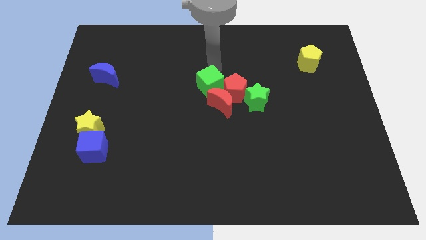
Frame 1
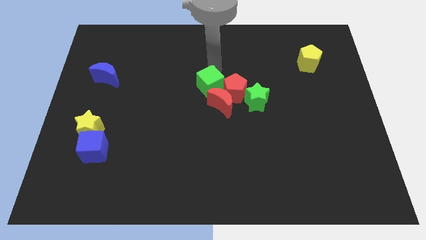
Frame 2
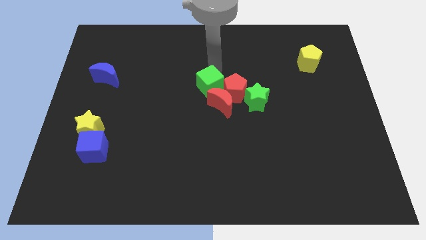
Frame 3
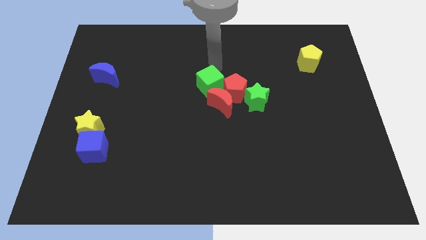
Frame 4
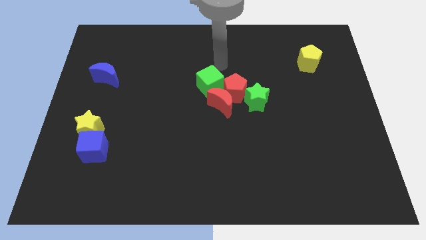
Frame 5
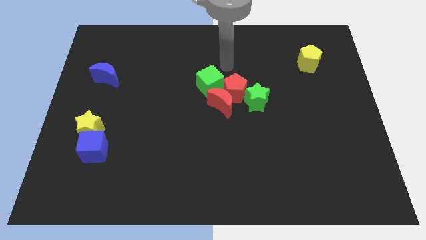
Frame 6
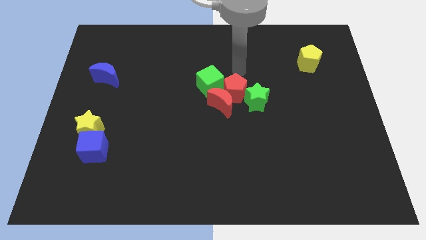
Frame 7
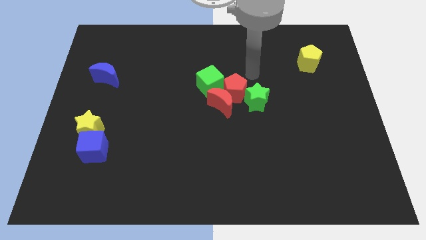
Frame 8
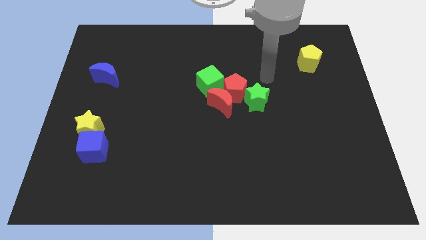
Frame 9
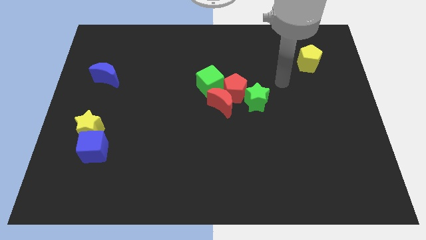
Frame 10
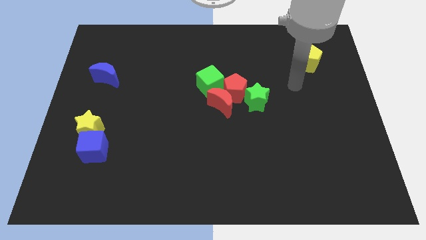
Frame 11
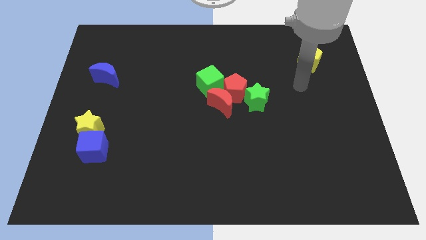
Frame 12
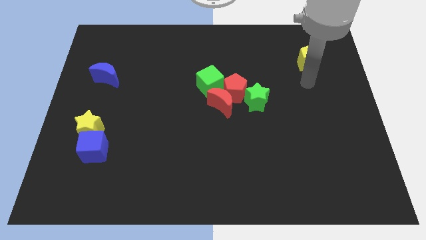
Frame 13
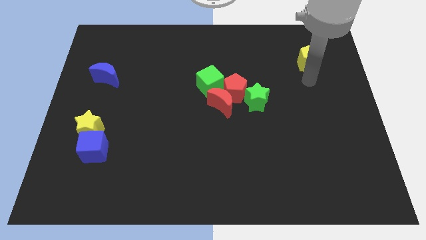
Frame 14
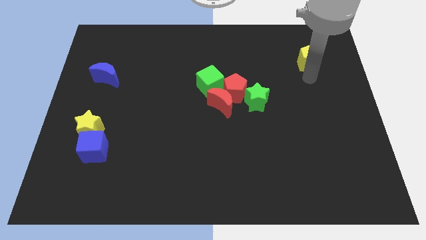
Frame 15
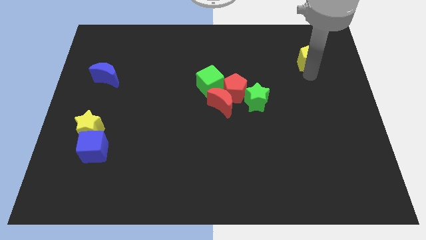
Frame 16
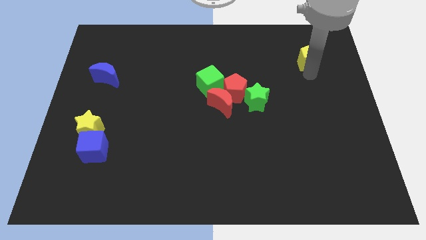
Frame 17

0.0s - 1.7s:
move your arm towards the yellow pentagon

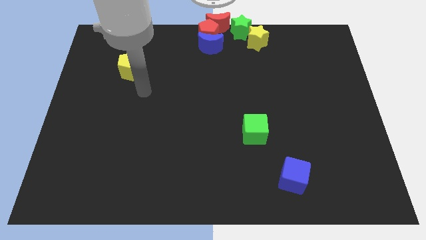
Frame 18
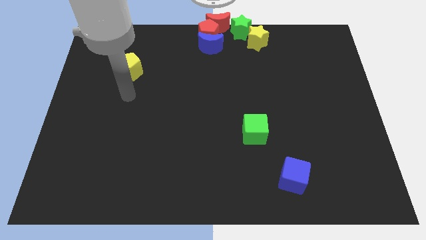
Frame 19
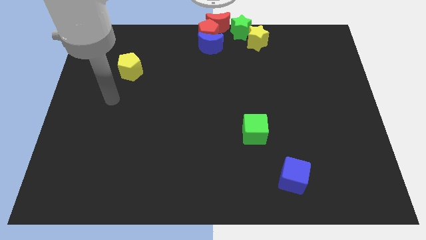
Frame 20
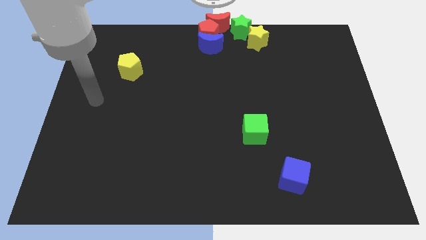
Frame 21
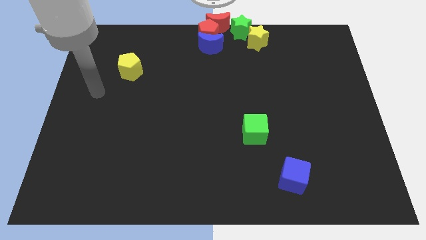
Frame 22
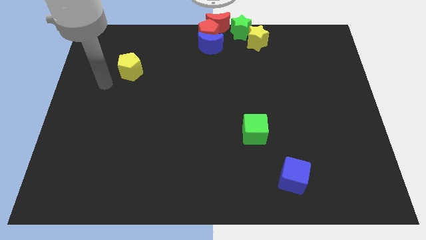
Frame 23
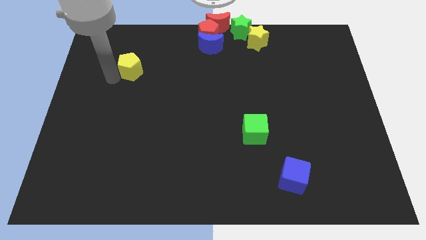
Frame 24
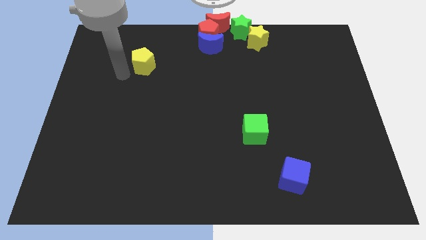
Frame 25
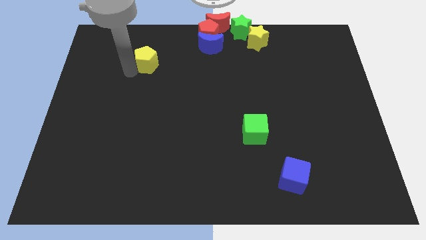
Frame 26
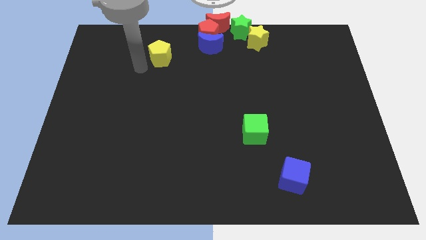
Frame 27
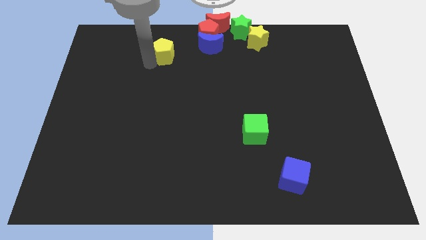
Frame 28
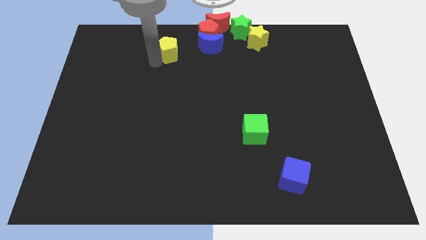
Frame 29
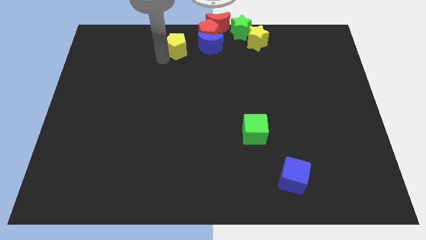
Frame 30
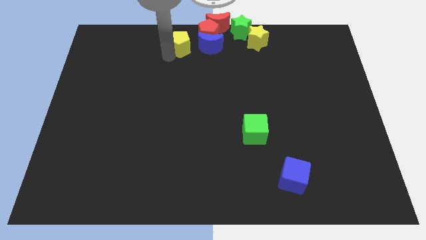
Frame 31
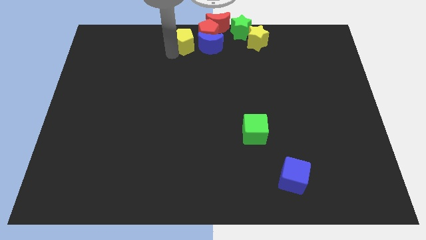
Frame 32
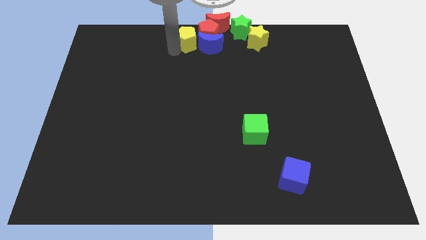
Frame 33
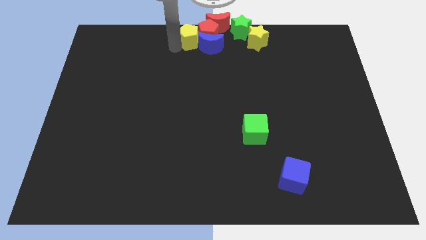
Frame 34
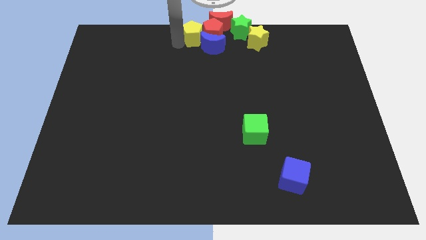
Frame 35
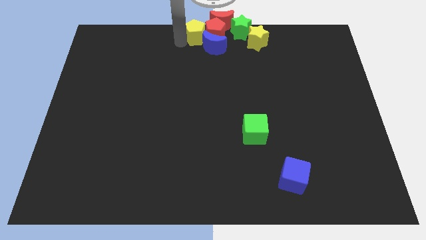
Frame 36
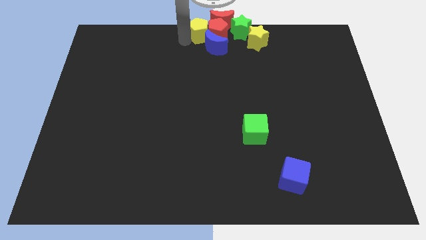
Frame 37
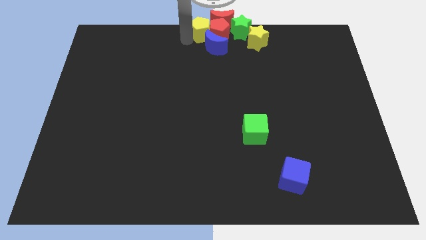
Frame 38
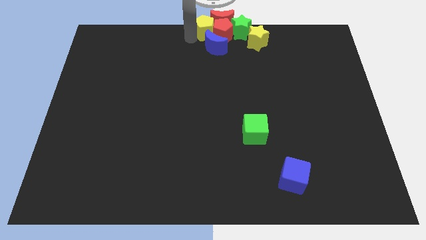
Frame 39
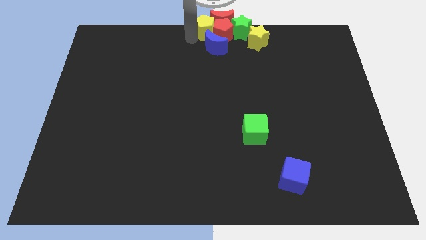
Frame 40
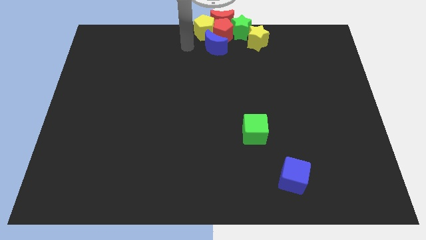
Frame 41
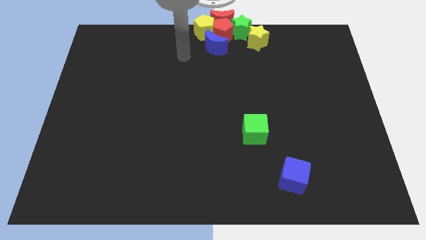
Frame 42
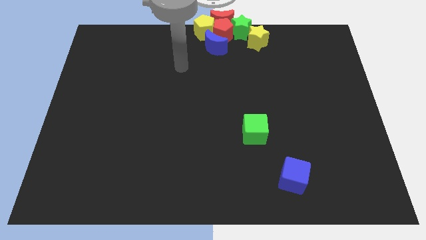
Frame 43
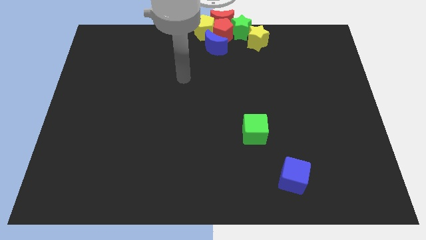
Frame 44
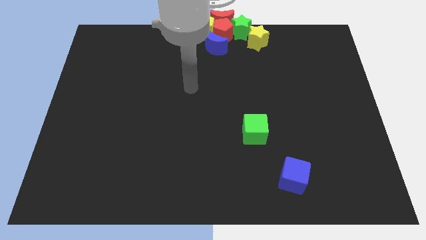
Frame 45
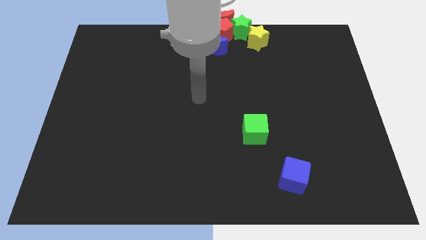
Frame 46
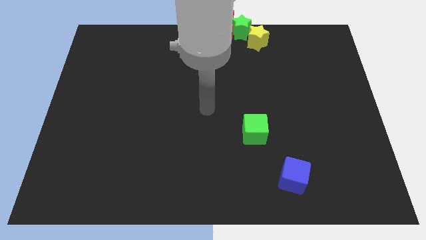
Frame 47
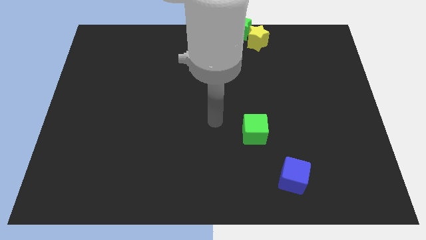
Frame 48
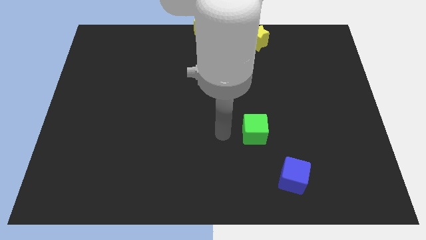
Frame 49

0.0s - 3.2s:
push the yellow pentagon to the top center

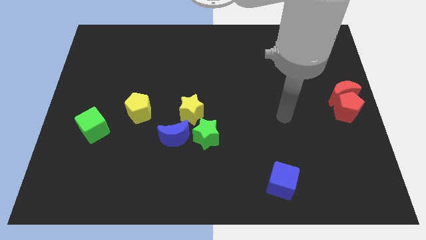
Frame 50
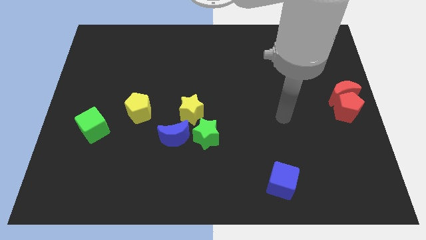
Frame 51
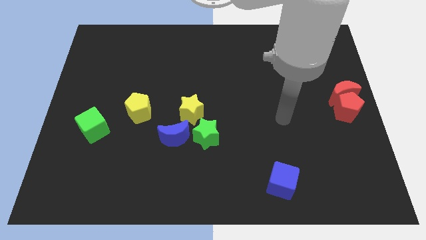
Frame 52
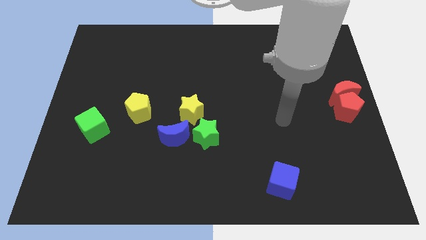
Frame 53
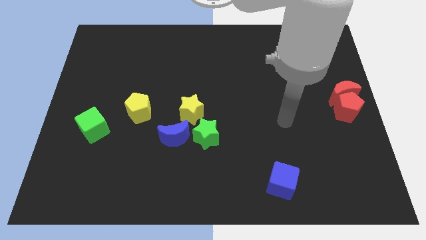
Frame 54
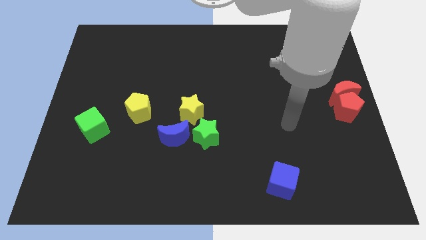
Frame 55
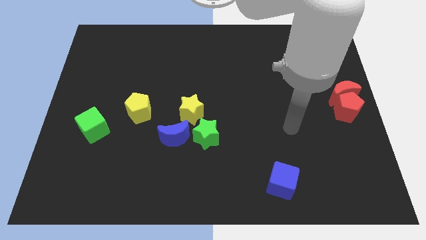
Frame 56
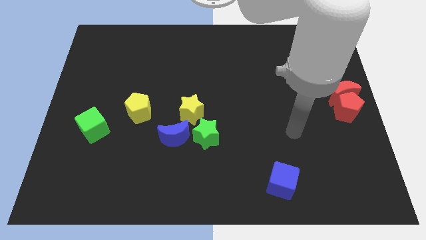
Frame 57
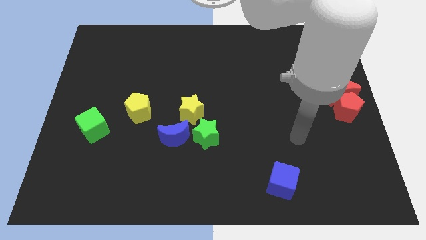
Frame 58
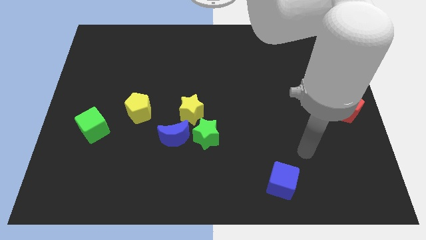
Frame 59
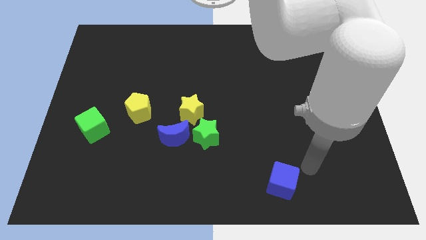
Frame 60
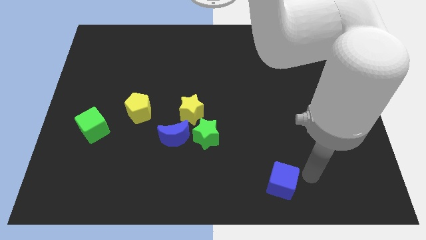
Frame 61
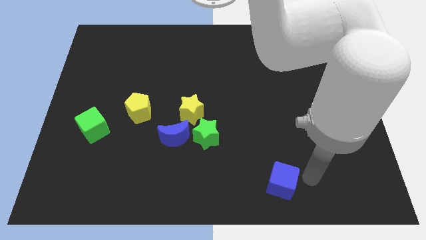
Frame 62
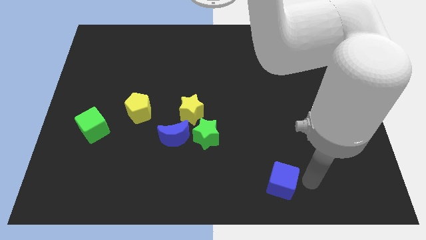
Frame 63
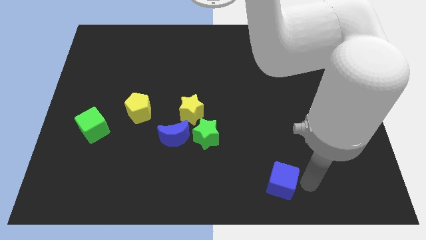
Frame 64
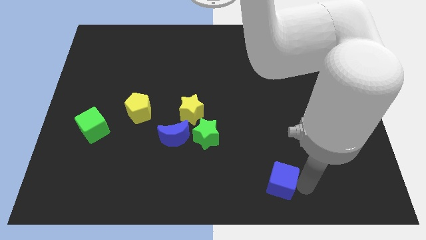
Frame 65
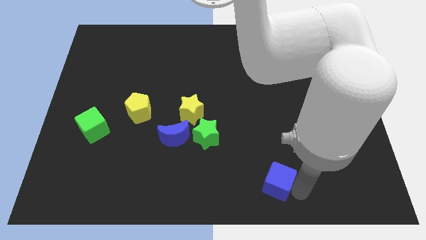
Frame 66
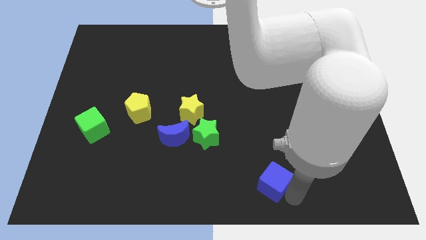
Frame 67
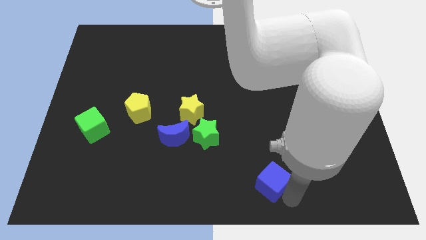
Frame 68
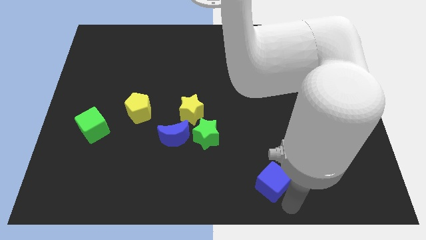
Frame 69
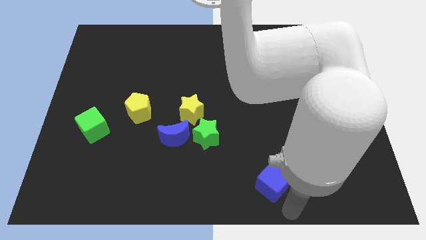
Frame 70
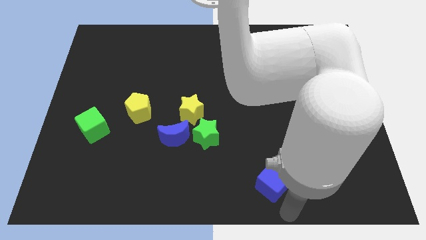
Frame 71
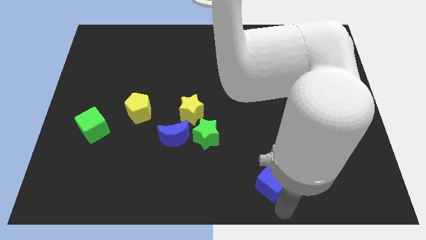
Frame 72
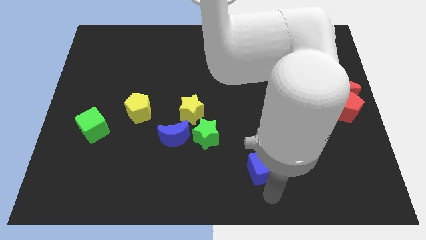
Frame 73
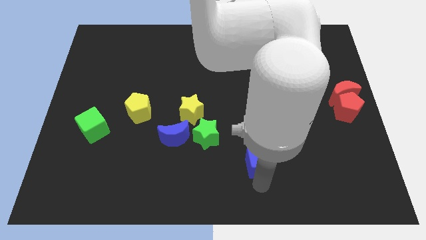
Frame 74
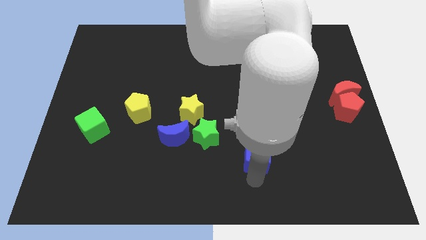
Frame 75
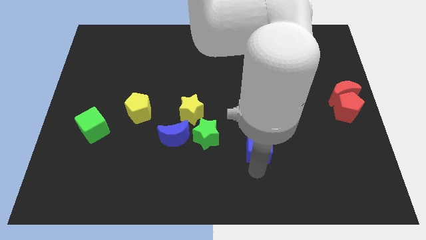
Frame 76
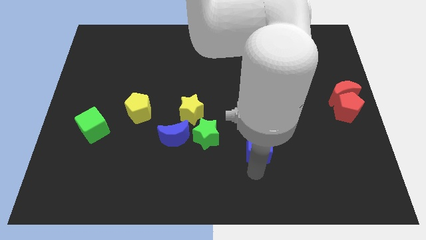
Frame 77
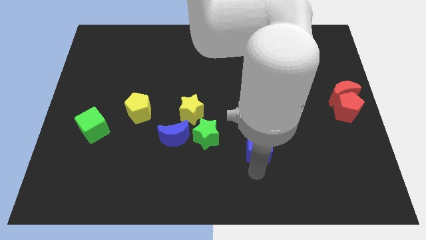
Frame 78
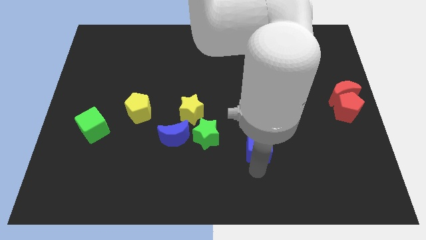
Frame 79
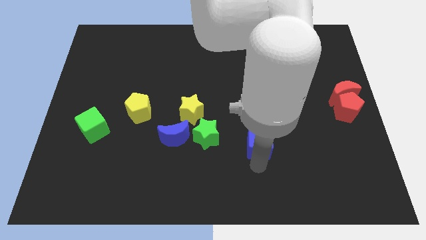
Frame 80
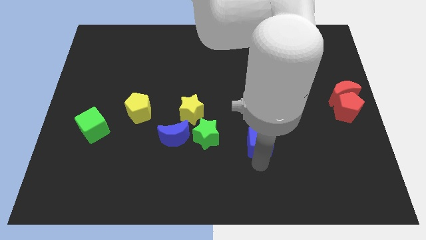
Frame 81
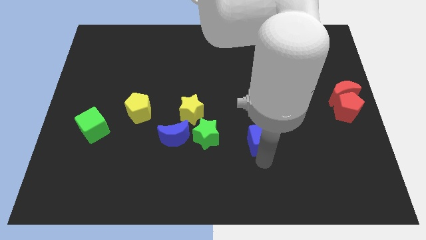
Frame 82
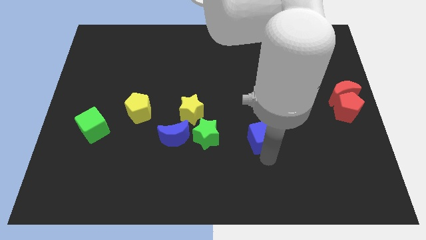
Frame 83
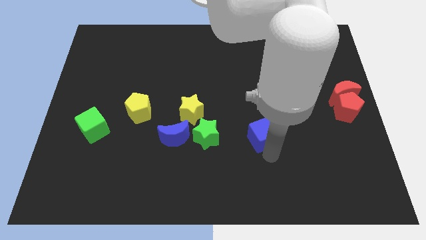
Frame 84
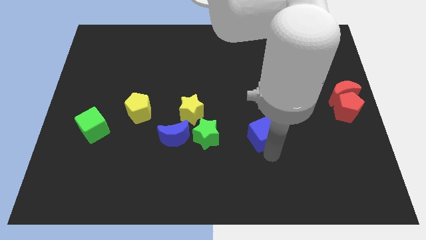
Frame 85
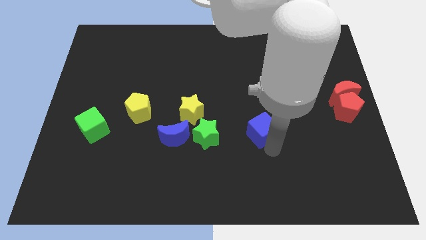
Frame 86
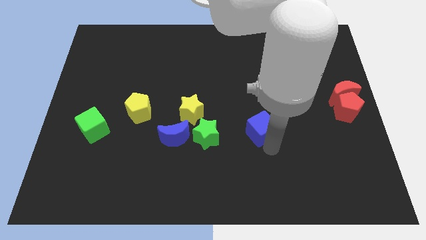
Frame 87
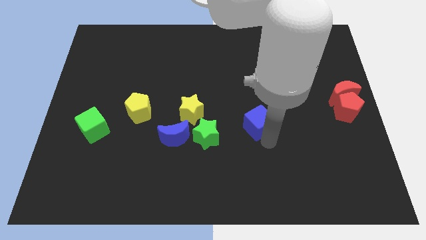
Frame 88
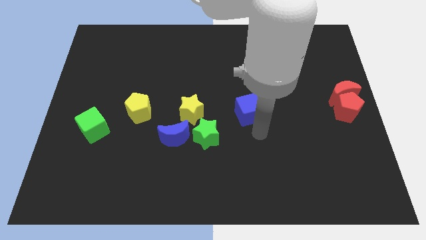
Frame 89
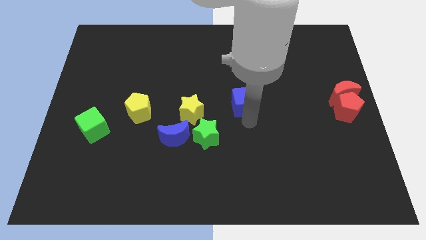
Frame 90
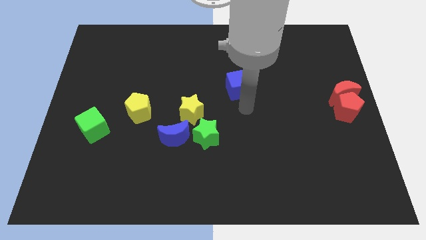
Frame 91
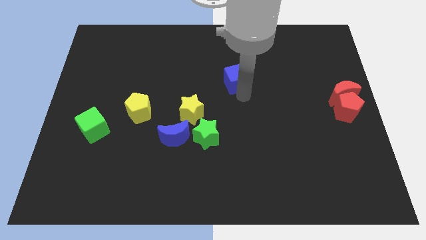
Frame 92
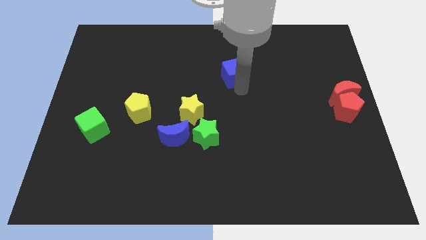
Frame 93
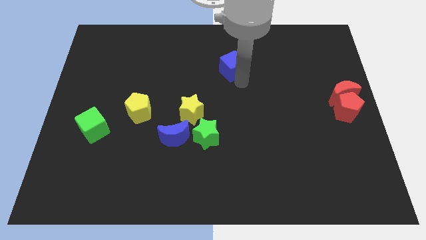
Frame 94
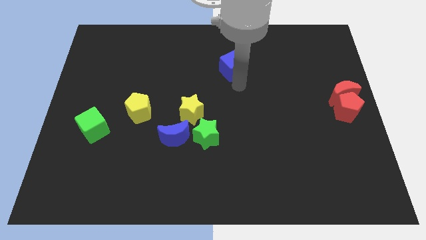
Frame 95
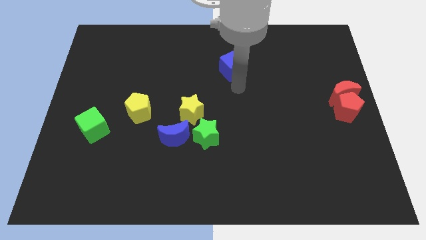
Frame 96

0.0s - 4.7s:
push the blue cube towards the top center
